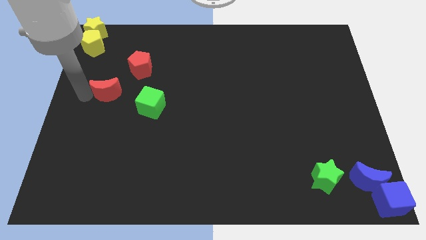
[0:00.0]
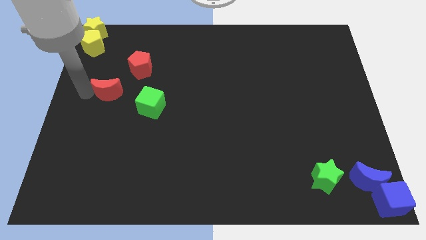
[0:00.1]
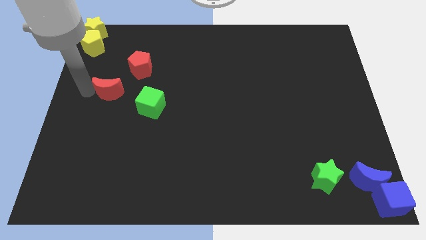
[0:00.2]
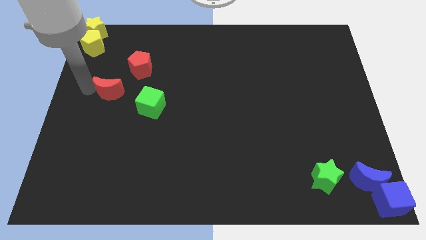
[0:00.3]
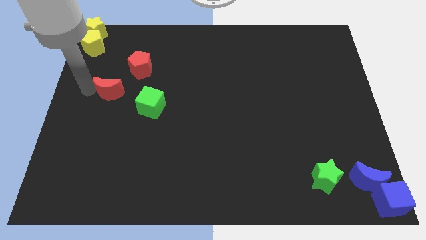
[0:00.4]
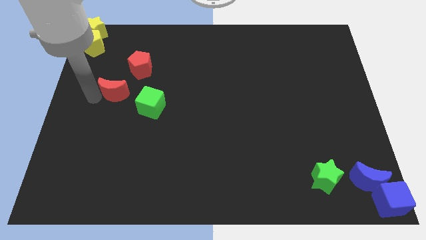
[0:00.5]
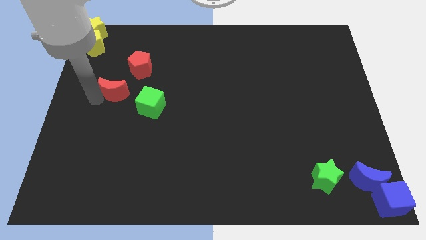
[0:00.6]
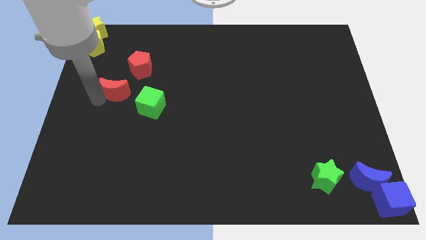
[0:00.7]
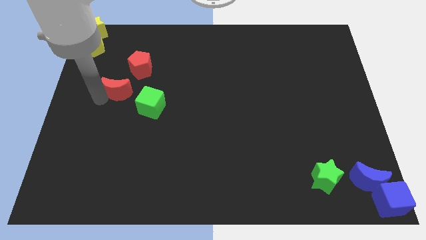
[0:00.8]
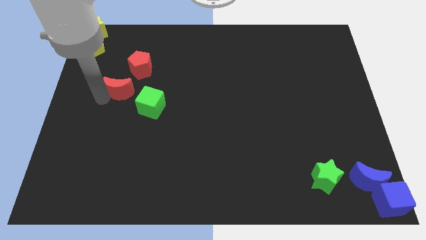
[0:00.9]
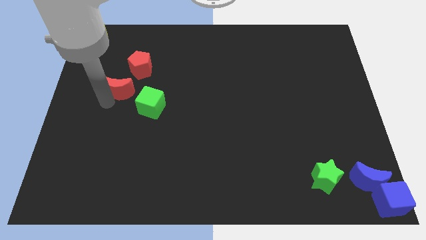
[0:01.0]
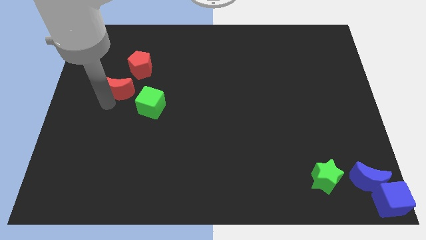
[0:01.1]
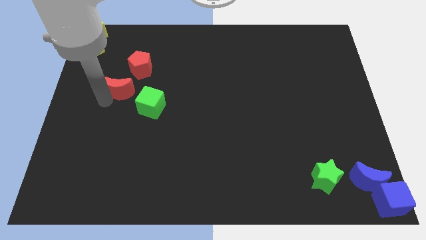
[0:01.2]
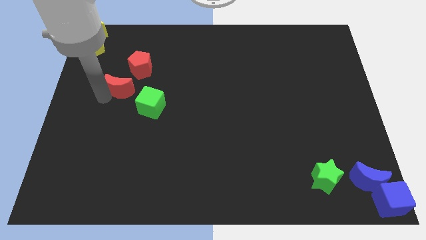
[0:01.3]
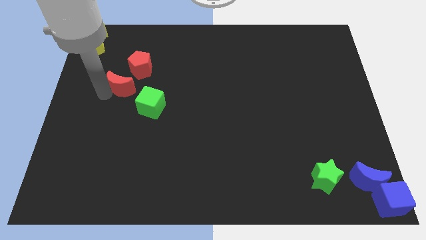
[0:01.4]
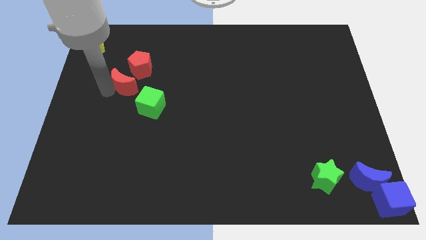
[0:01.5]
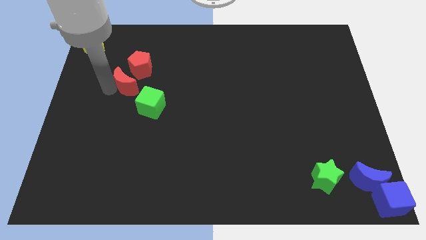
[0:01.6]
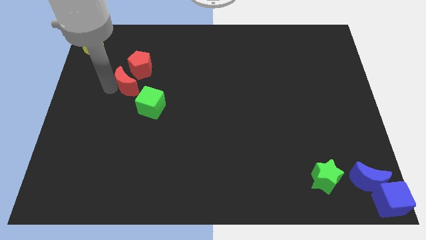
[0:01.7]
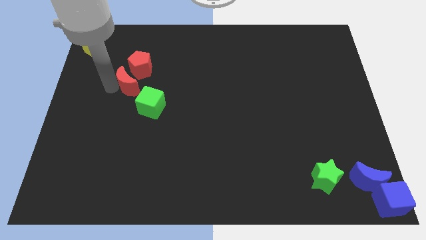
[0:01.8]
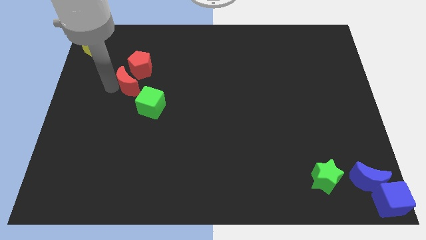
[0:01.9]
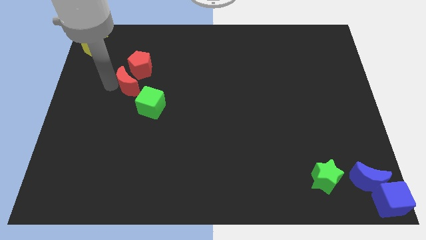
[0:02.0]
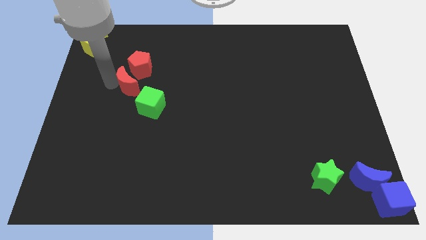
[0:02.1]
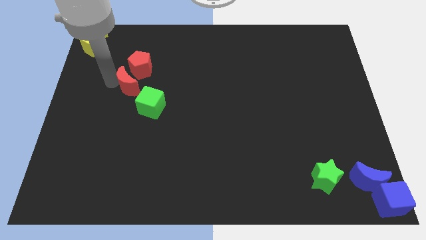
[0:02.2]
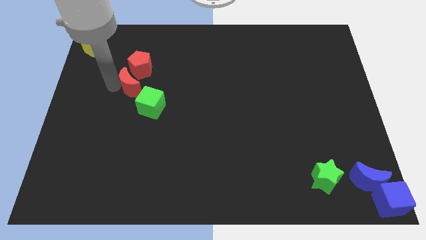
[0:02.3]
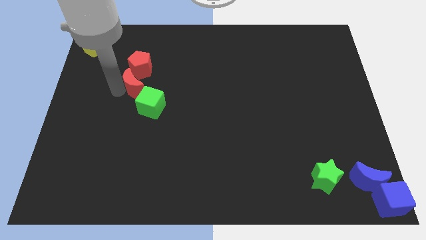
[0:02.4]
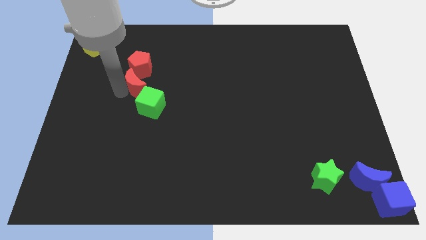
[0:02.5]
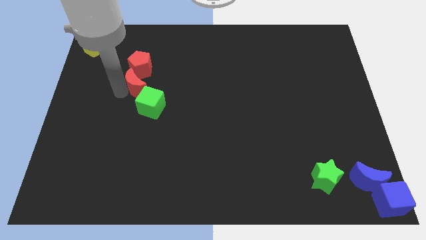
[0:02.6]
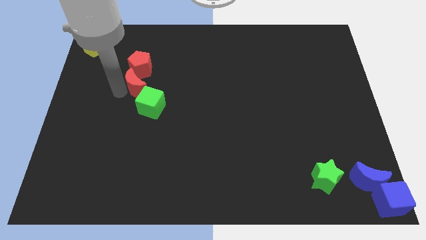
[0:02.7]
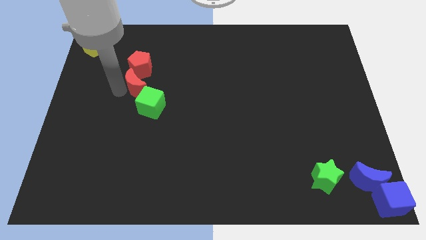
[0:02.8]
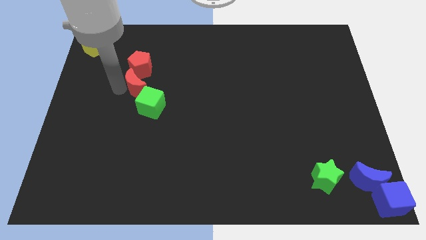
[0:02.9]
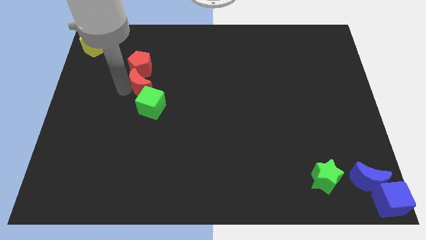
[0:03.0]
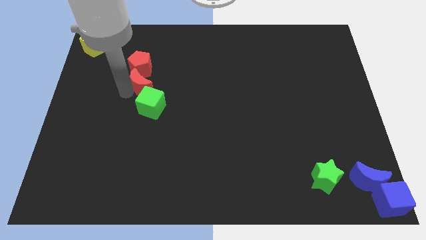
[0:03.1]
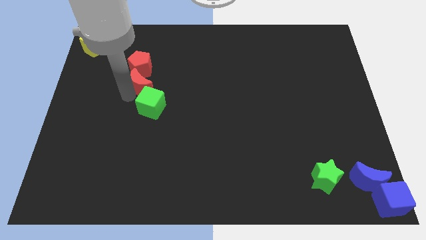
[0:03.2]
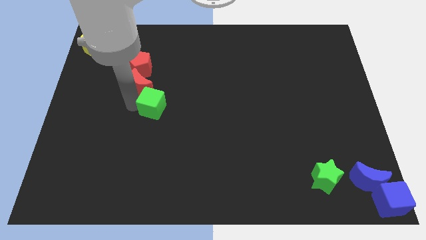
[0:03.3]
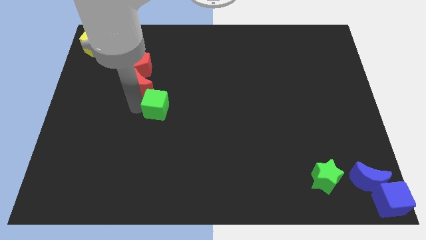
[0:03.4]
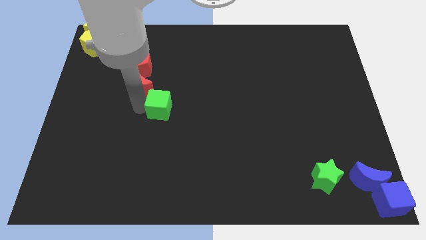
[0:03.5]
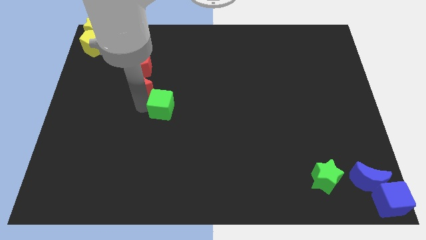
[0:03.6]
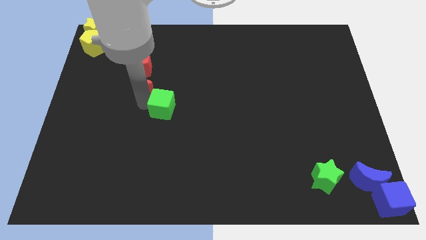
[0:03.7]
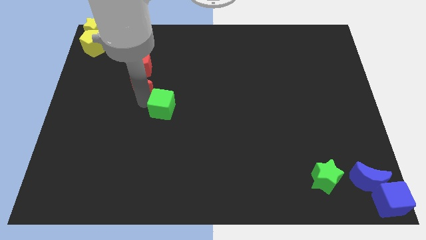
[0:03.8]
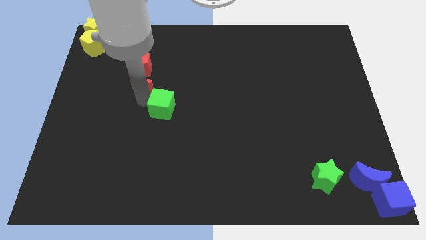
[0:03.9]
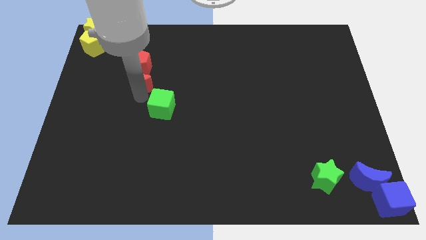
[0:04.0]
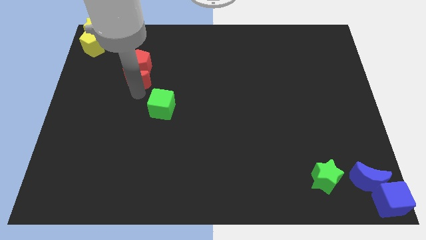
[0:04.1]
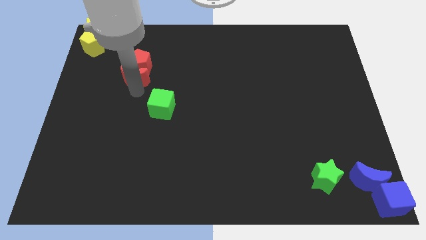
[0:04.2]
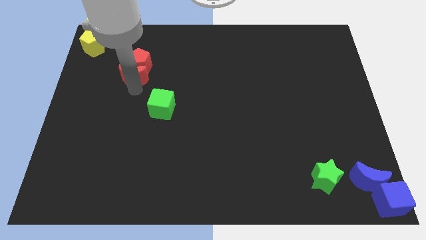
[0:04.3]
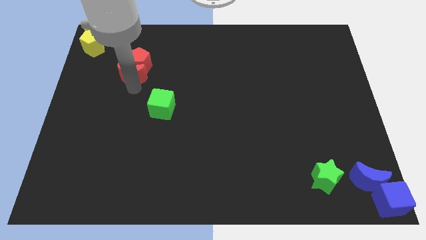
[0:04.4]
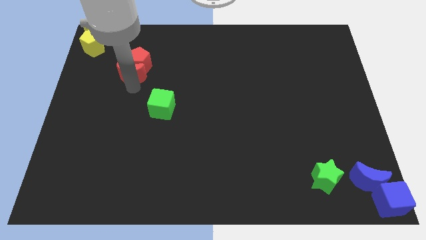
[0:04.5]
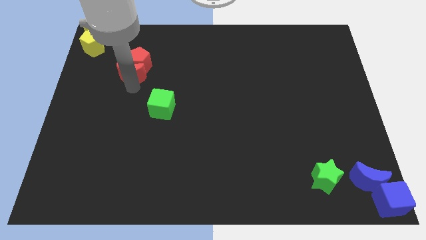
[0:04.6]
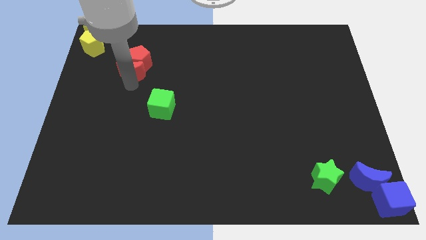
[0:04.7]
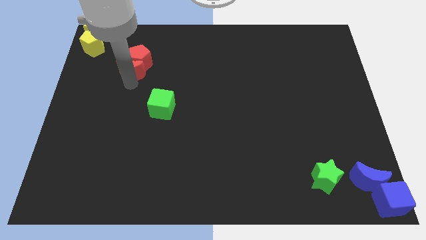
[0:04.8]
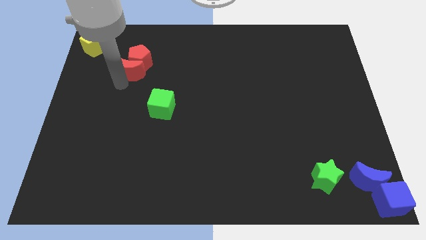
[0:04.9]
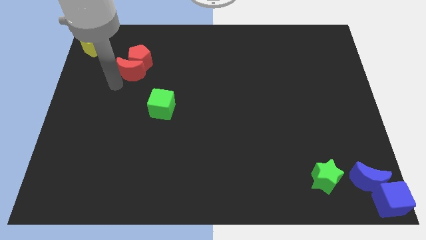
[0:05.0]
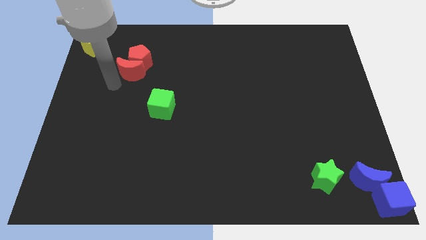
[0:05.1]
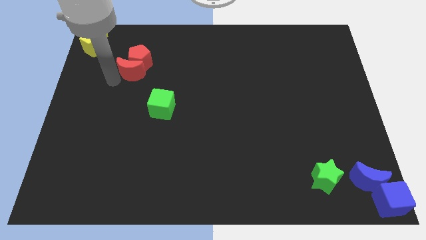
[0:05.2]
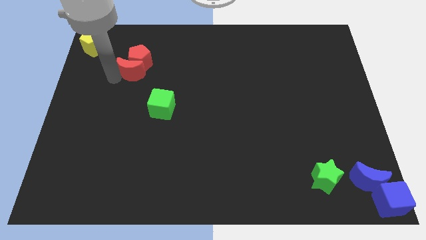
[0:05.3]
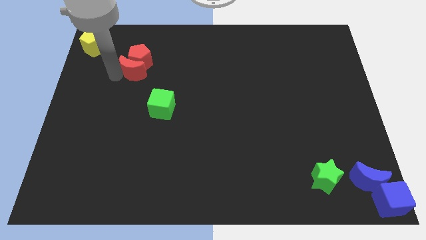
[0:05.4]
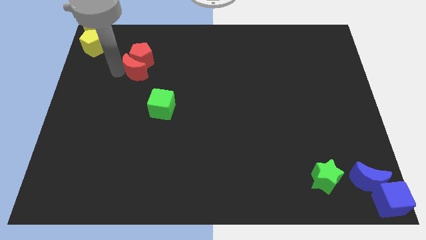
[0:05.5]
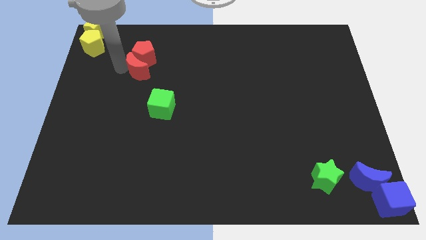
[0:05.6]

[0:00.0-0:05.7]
move the red crescent into red pentagon

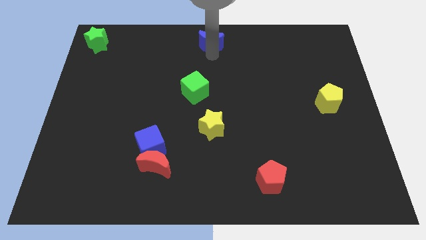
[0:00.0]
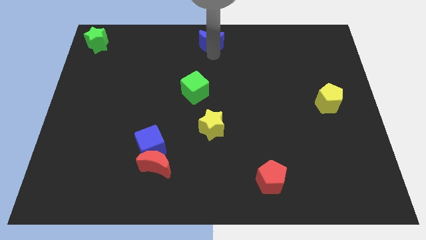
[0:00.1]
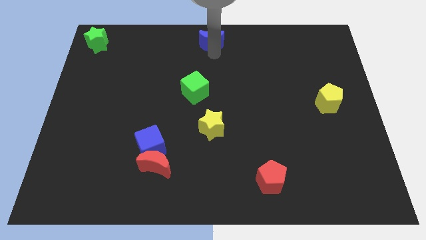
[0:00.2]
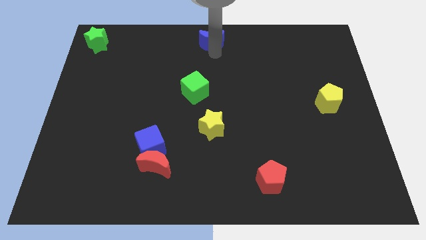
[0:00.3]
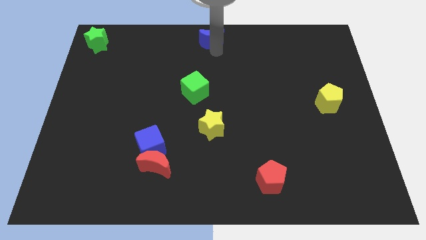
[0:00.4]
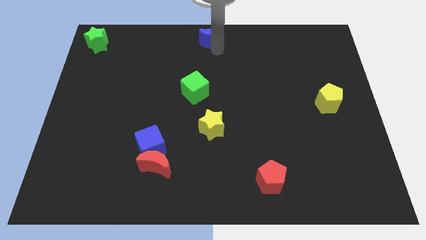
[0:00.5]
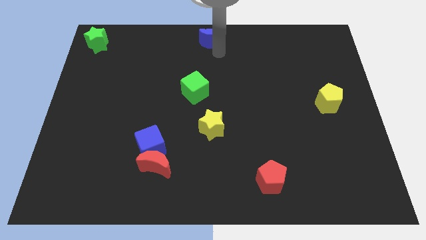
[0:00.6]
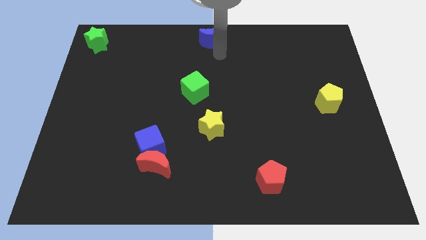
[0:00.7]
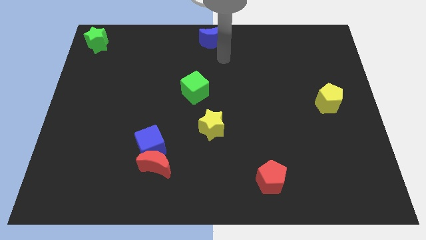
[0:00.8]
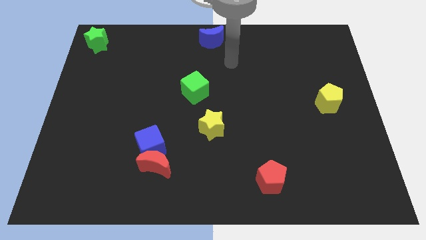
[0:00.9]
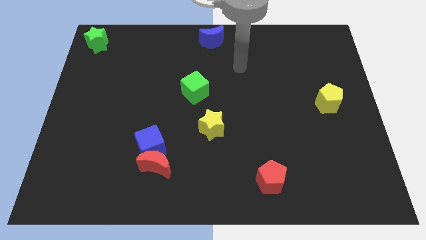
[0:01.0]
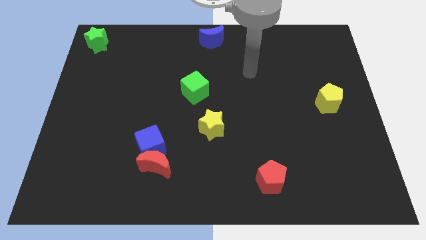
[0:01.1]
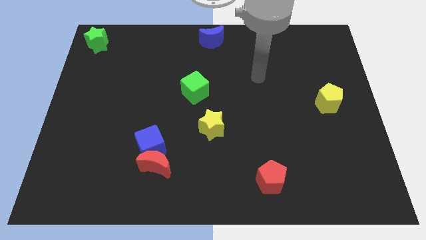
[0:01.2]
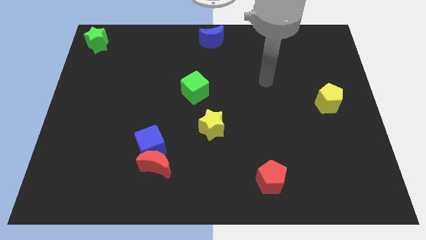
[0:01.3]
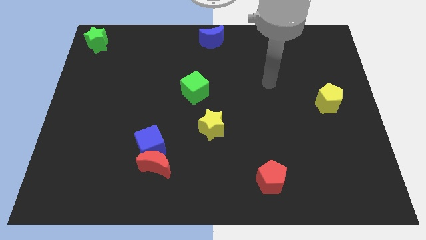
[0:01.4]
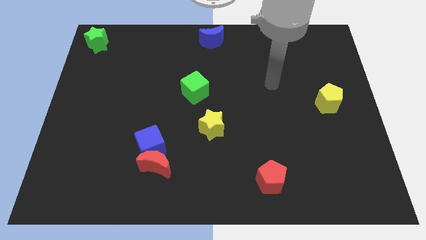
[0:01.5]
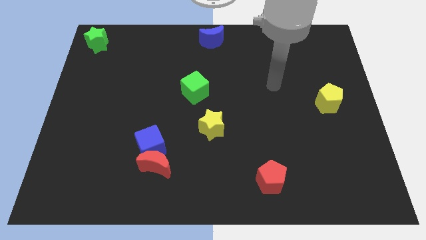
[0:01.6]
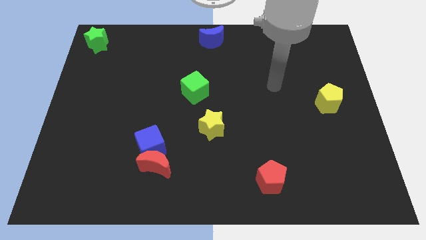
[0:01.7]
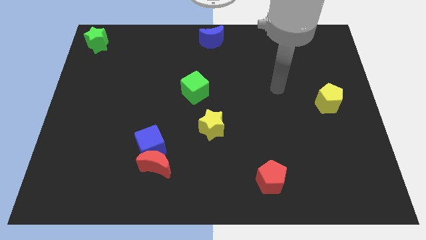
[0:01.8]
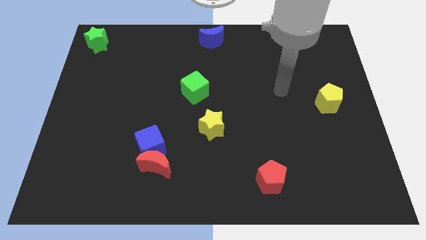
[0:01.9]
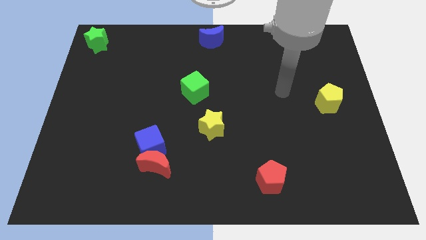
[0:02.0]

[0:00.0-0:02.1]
move the blue moon to the top middle

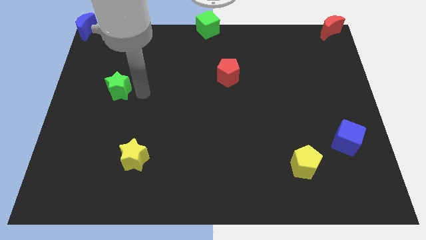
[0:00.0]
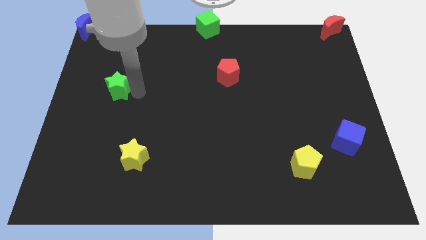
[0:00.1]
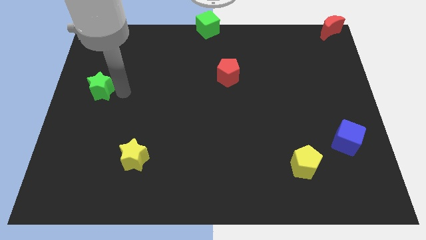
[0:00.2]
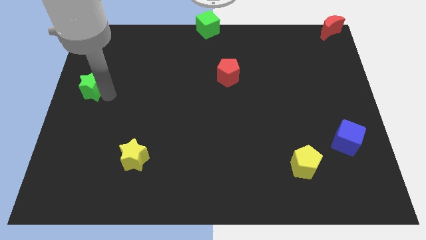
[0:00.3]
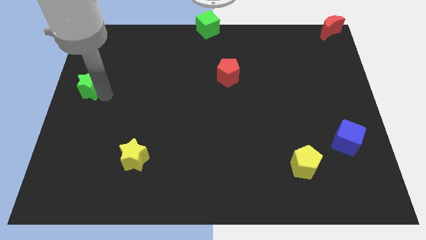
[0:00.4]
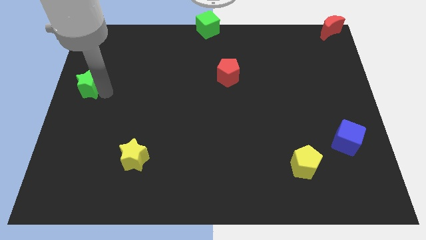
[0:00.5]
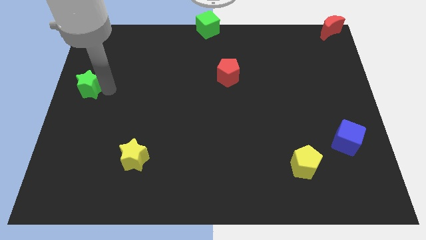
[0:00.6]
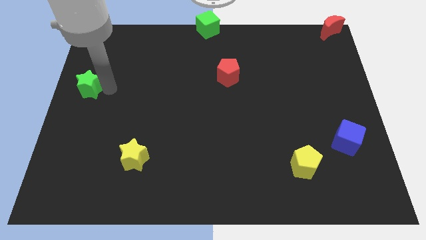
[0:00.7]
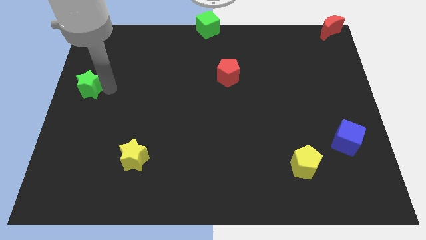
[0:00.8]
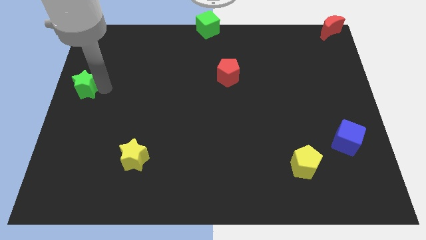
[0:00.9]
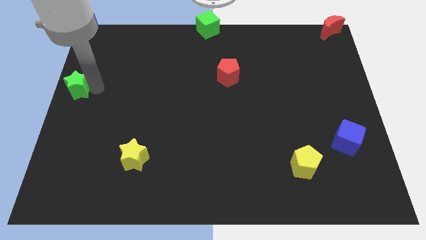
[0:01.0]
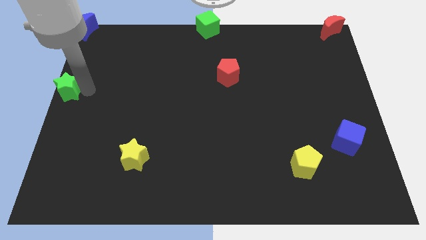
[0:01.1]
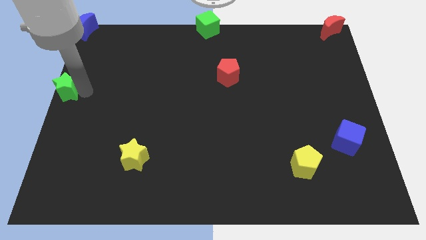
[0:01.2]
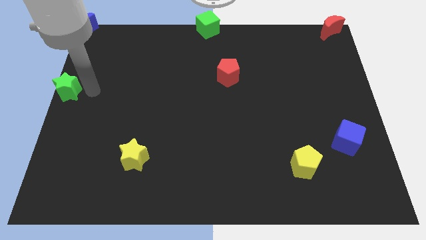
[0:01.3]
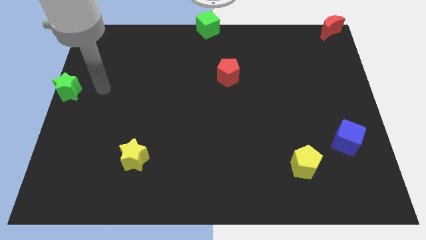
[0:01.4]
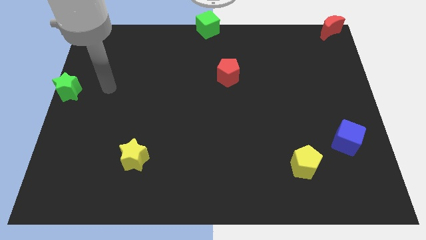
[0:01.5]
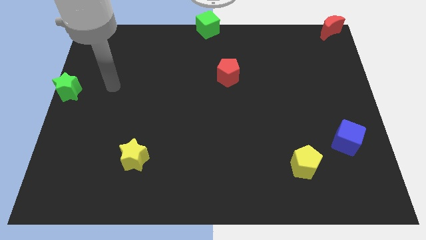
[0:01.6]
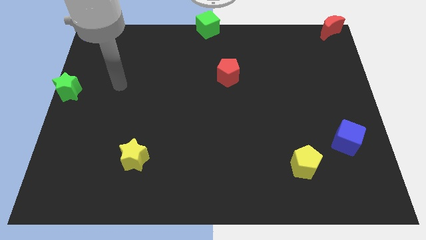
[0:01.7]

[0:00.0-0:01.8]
move the green star to center left of the board
